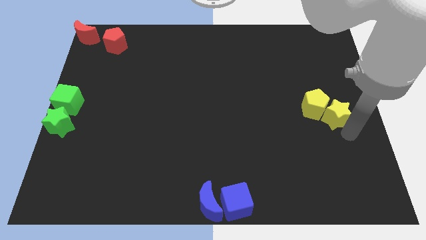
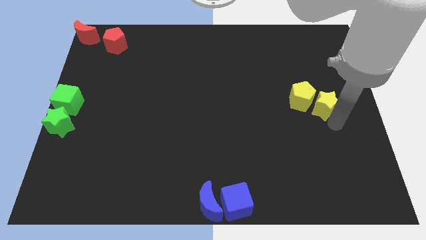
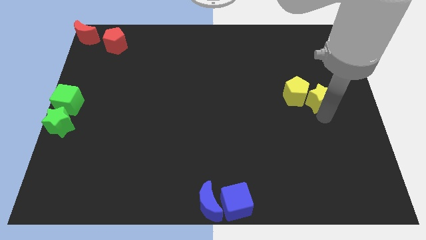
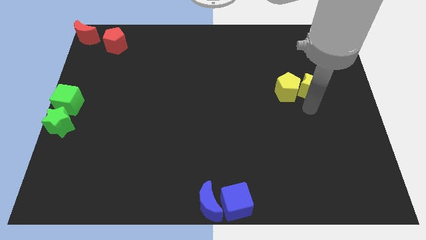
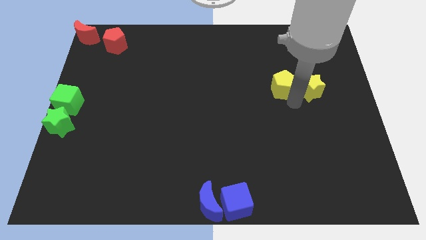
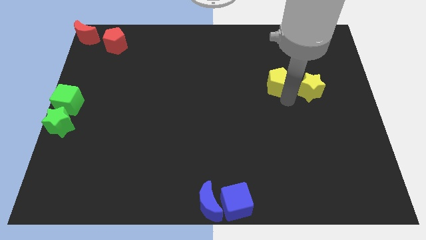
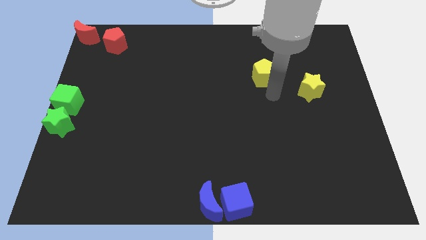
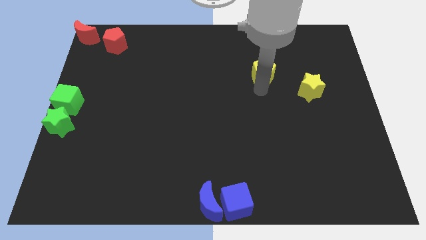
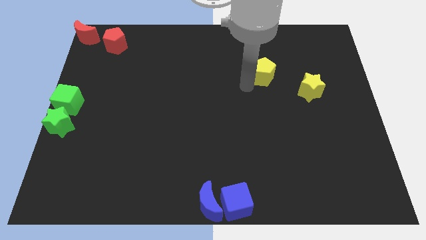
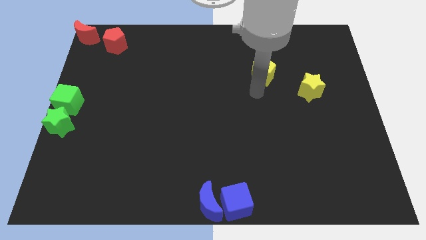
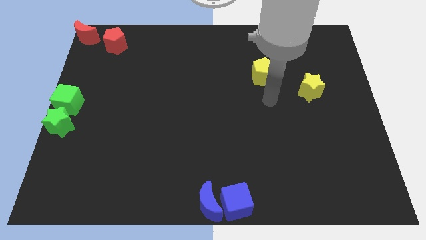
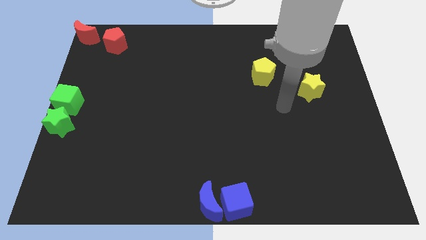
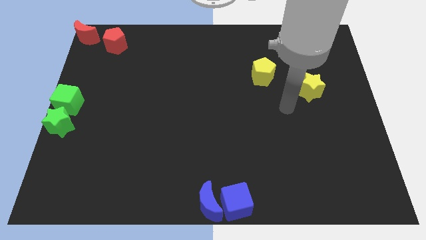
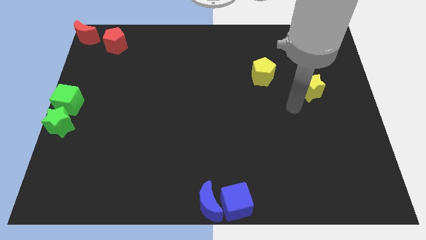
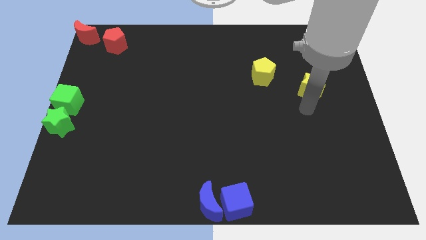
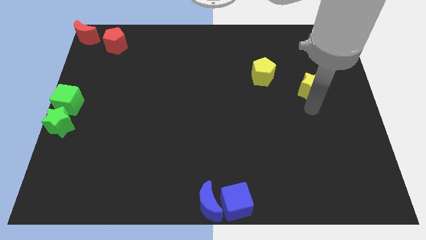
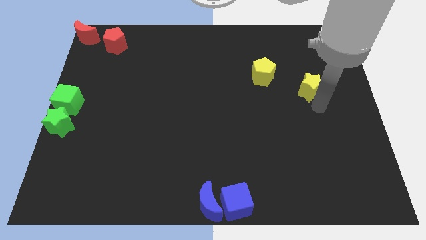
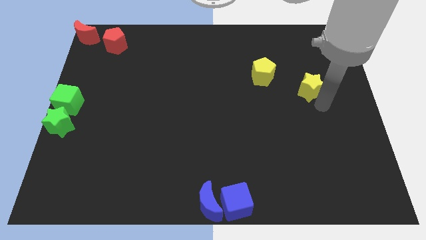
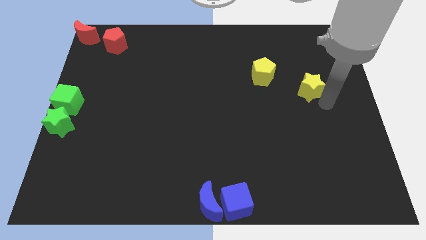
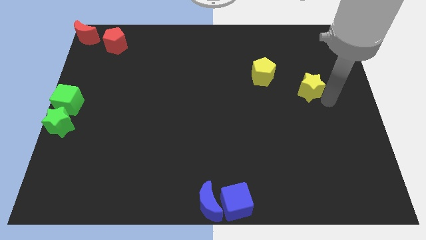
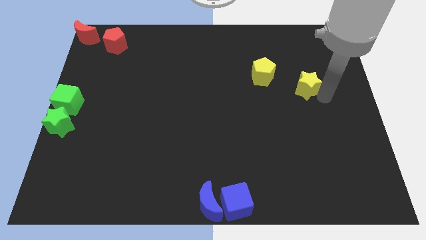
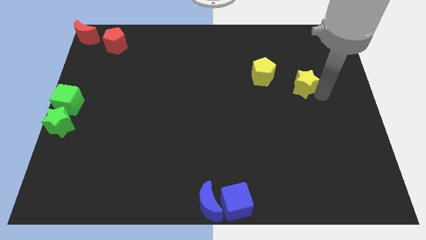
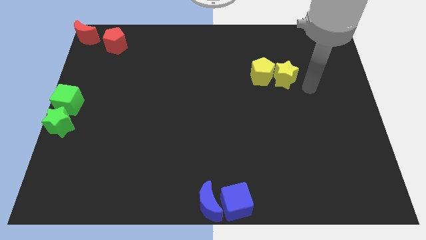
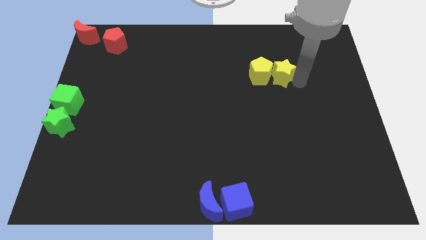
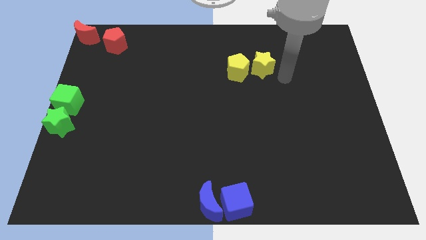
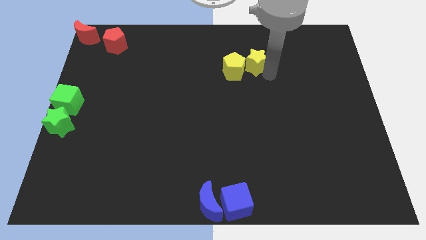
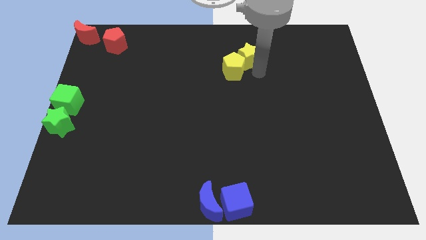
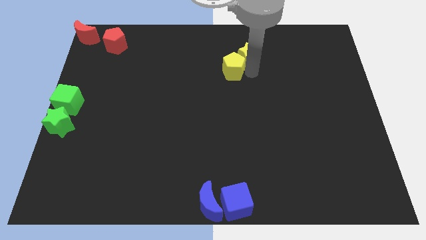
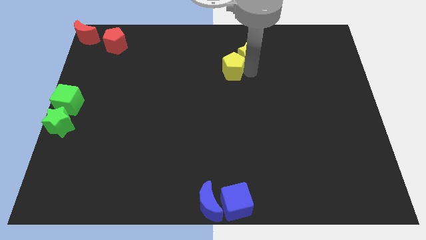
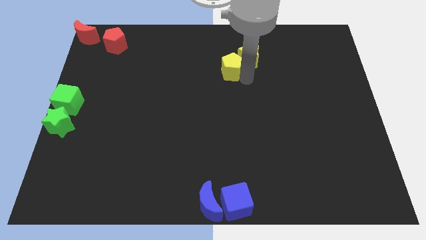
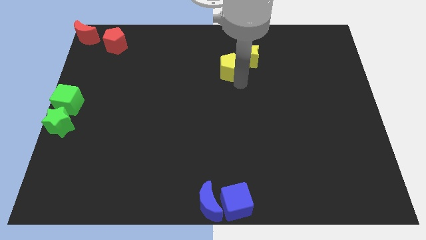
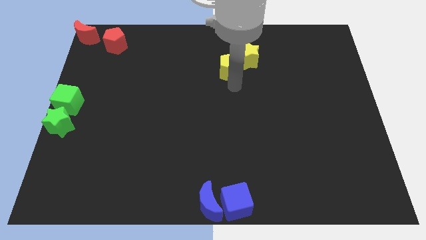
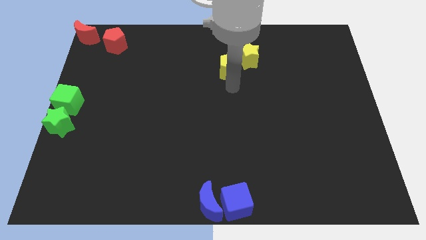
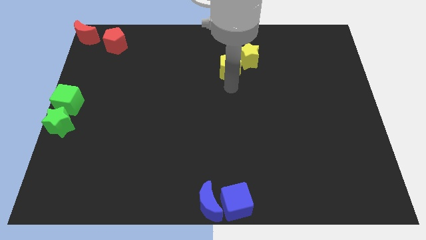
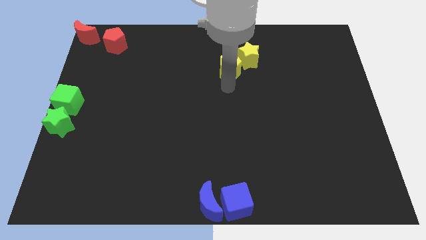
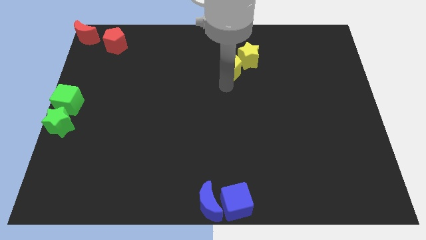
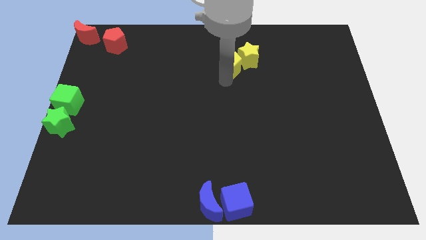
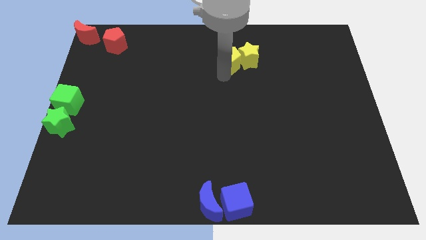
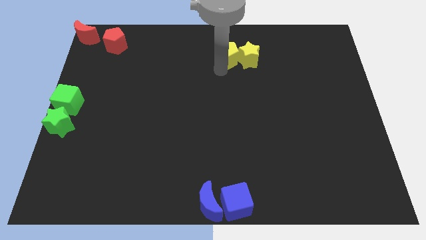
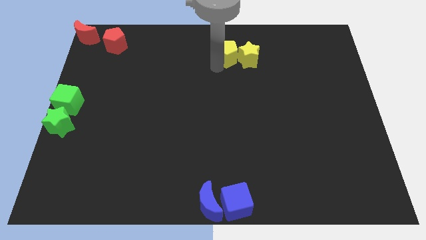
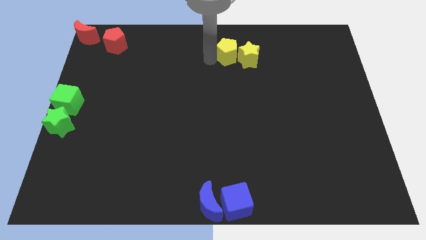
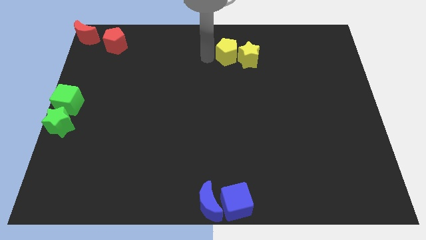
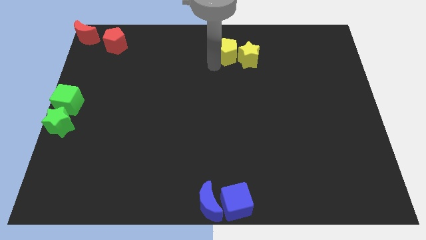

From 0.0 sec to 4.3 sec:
push the yellow blocks to the top center of the board

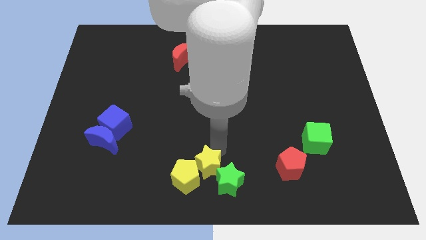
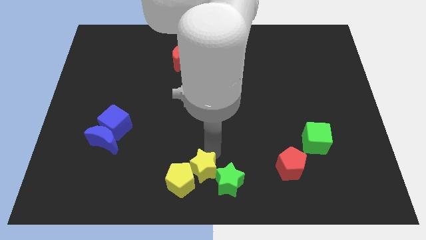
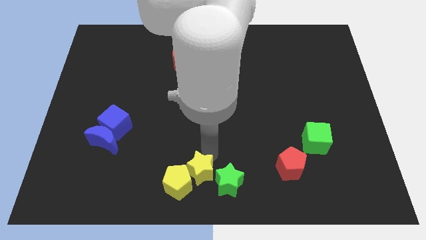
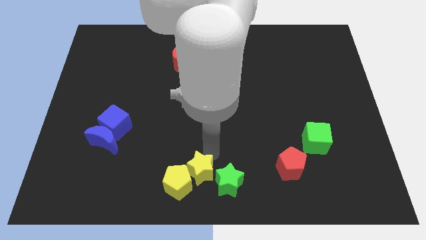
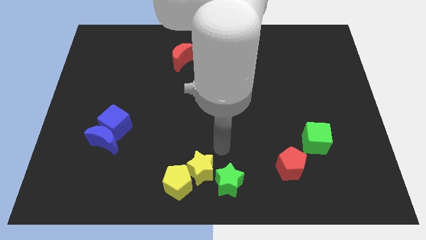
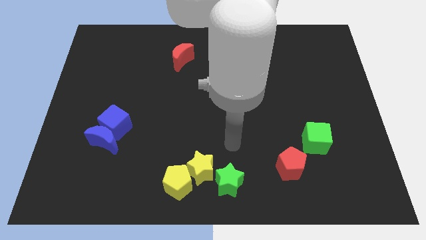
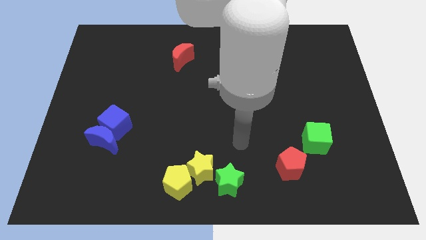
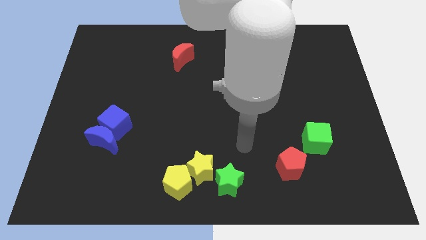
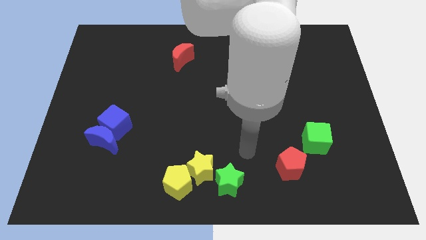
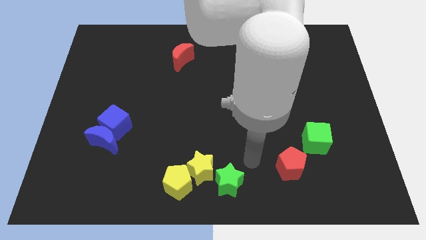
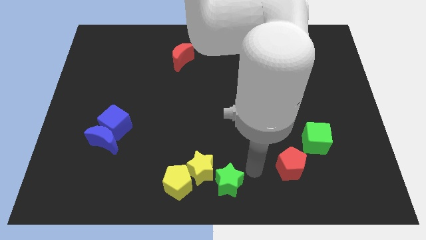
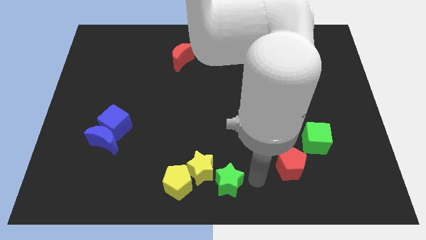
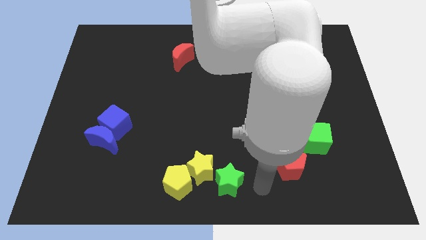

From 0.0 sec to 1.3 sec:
go near to the green star

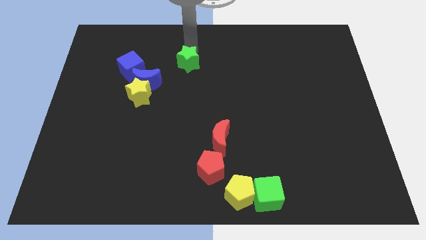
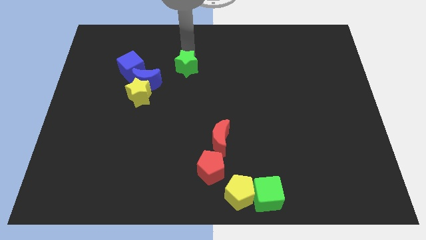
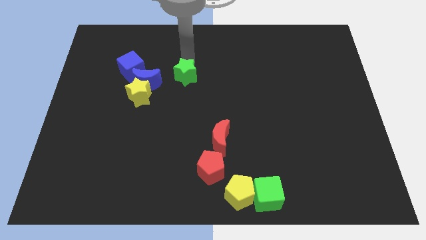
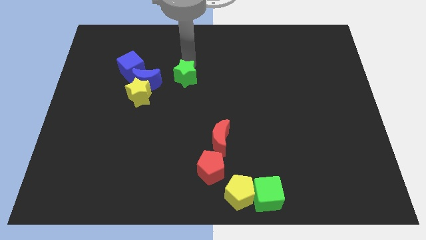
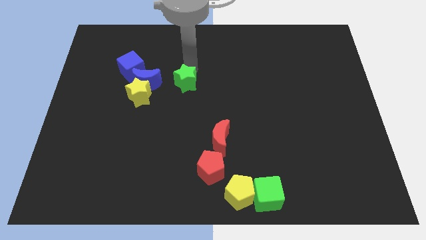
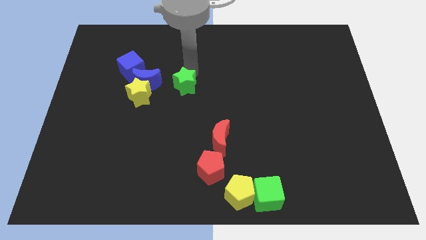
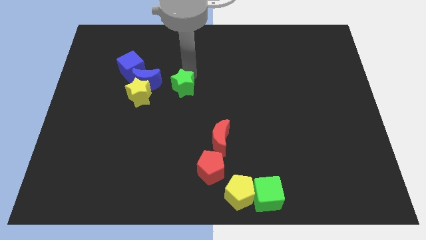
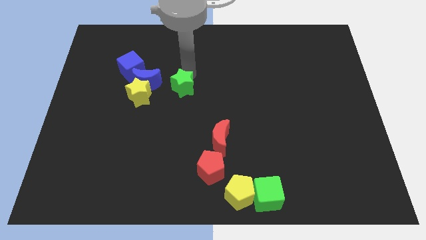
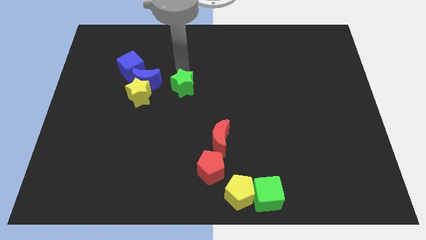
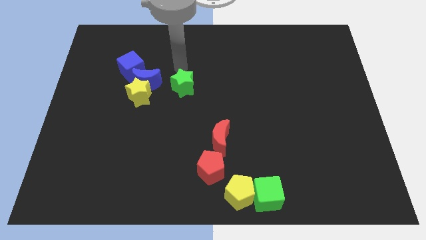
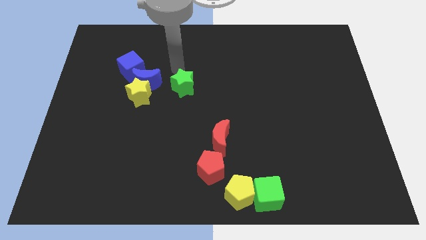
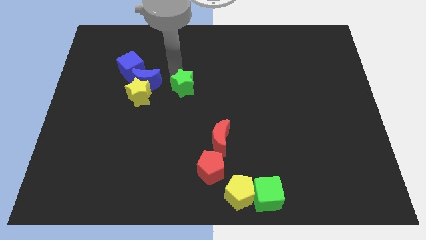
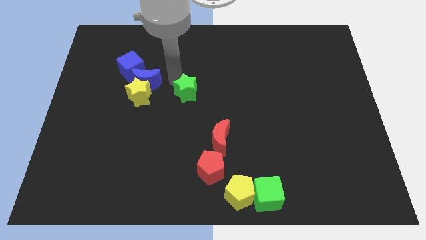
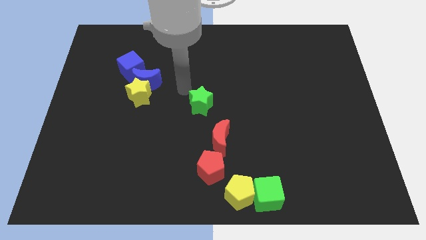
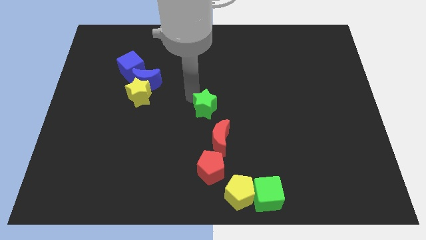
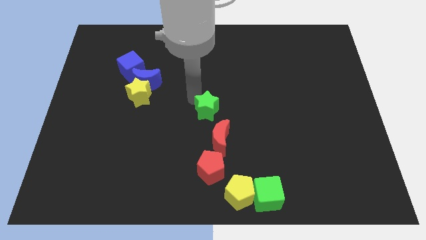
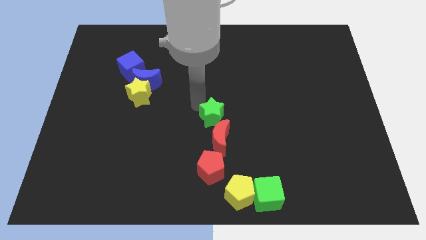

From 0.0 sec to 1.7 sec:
place the green star at the center

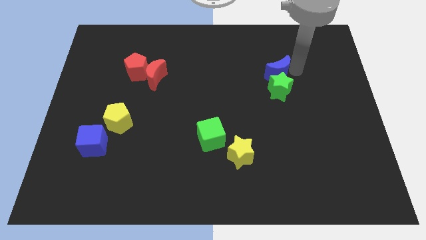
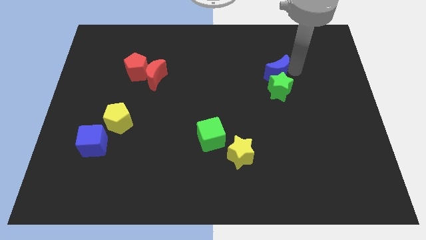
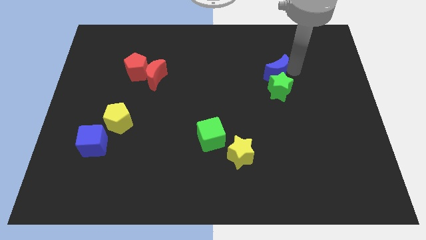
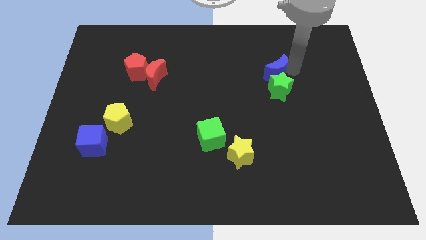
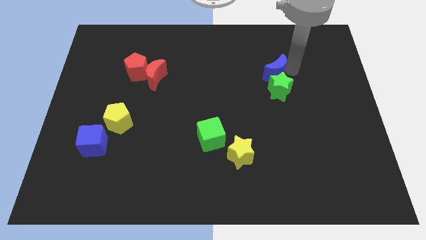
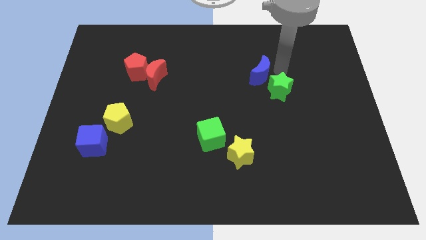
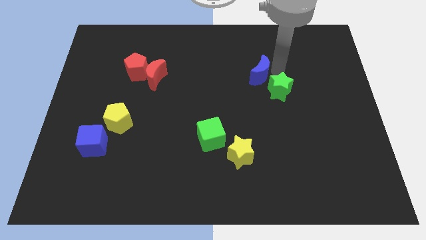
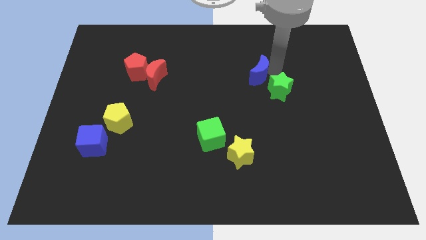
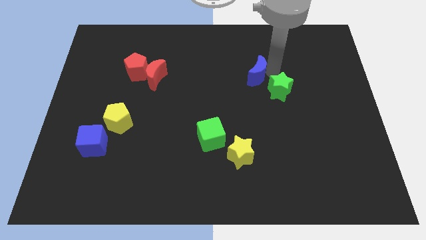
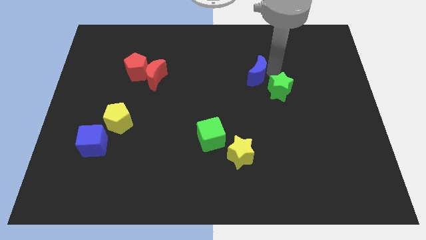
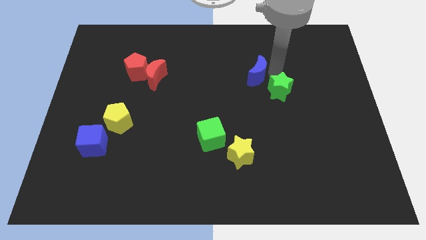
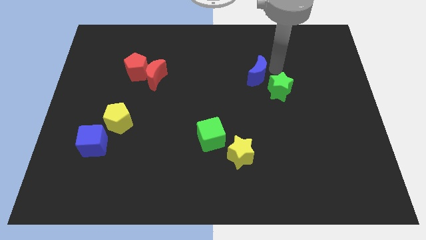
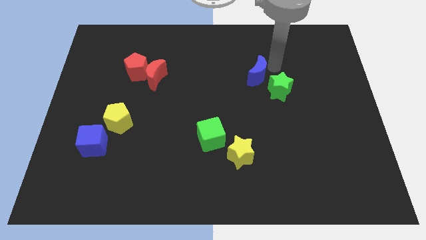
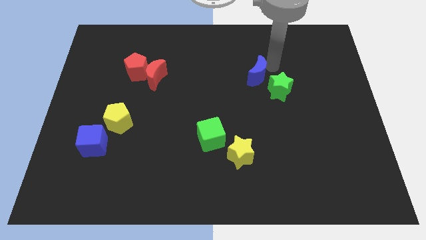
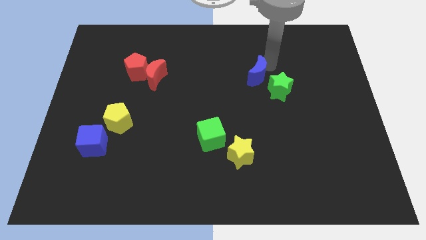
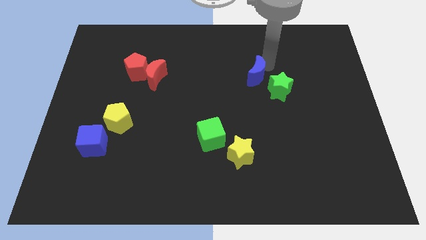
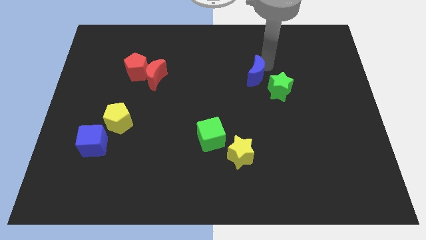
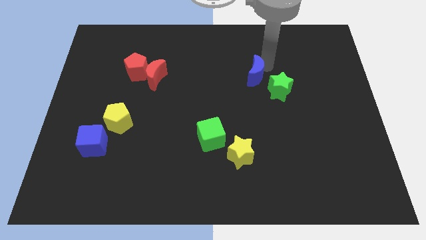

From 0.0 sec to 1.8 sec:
push the blue crescent to the top left of the green star
